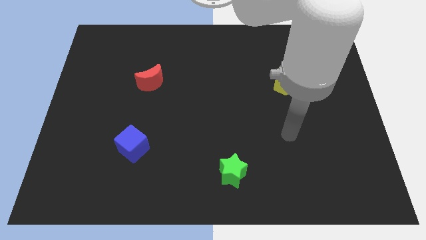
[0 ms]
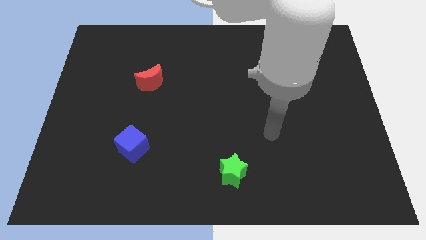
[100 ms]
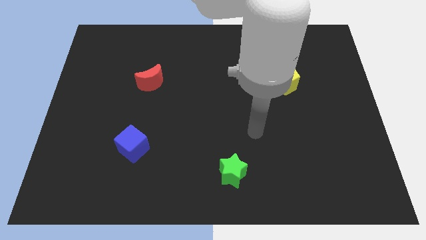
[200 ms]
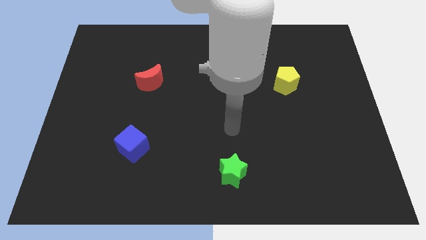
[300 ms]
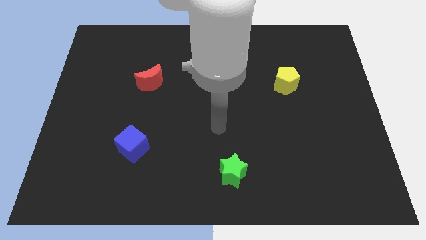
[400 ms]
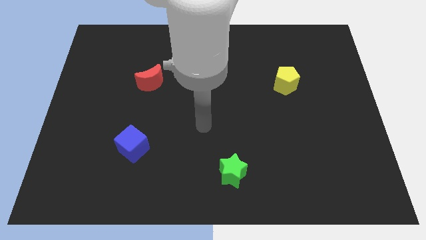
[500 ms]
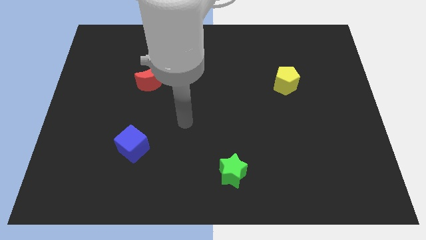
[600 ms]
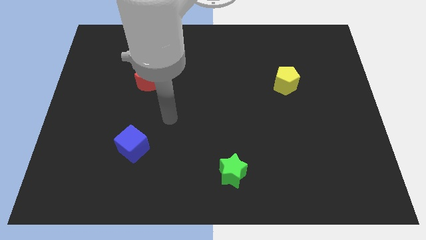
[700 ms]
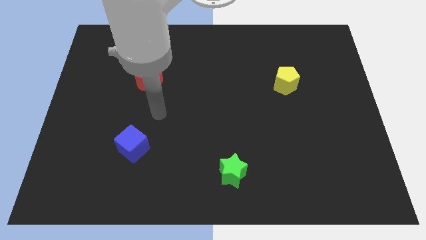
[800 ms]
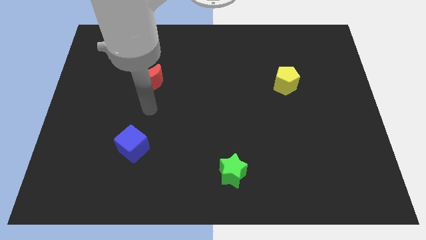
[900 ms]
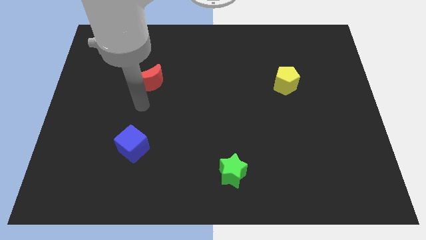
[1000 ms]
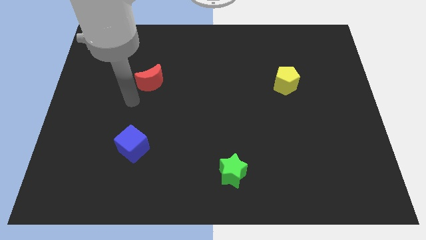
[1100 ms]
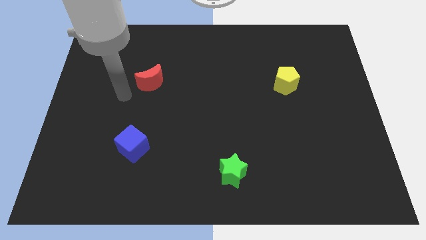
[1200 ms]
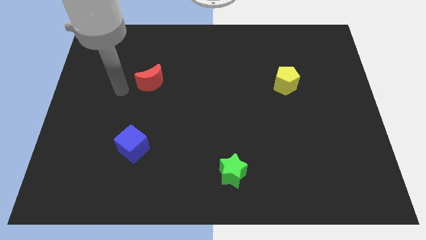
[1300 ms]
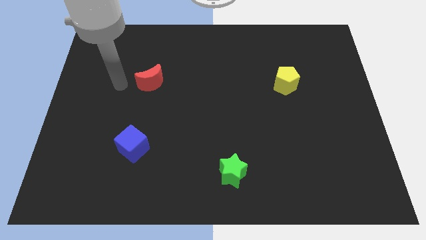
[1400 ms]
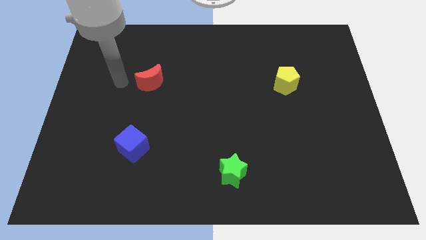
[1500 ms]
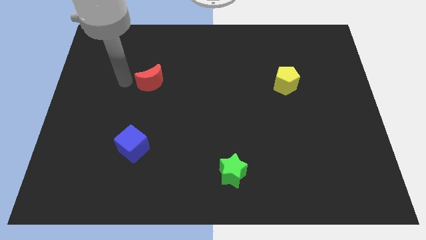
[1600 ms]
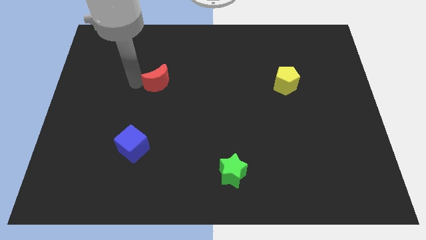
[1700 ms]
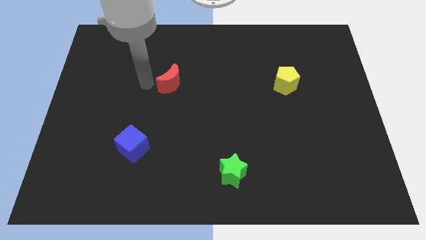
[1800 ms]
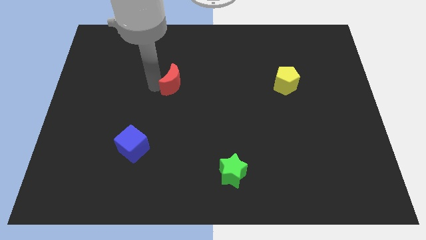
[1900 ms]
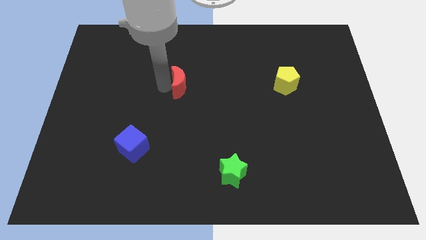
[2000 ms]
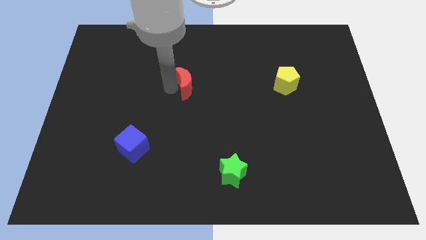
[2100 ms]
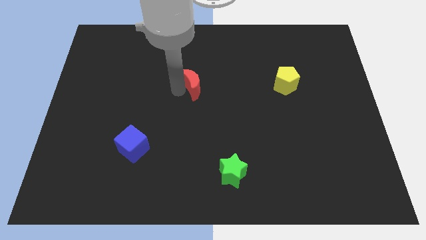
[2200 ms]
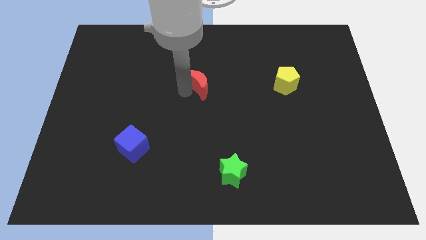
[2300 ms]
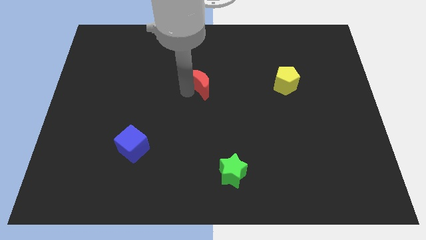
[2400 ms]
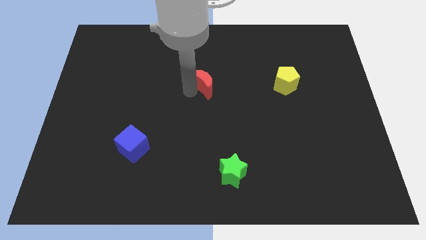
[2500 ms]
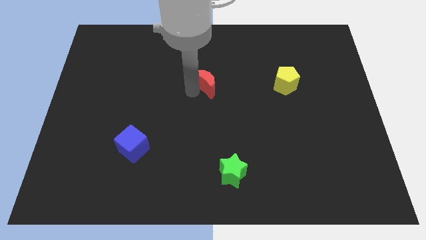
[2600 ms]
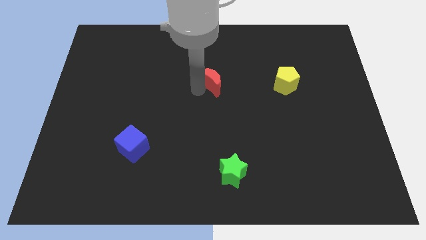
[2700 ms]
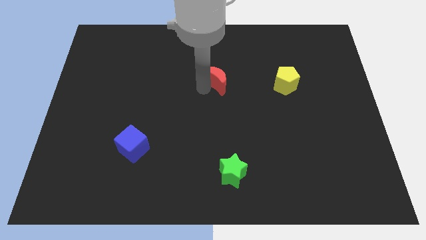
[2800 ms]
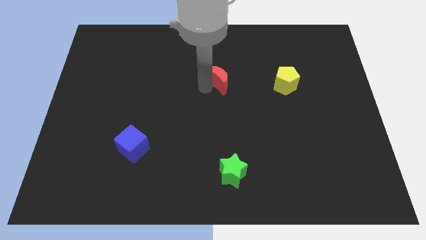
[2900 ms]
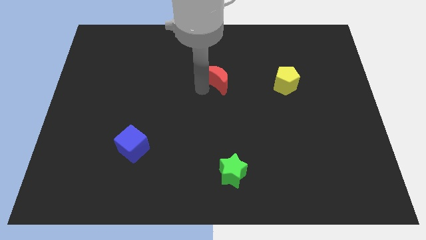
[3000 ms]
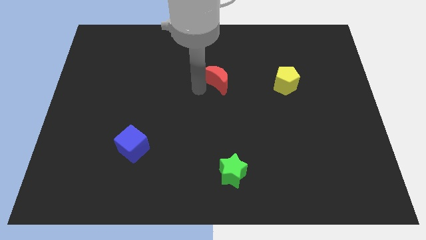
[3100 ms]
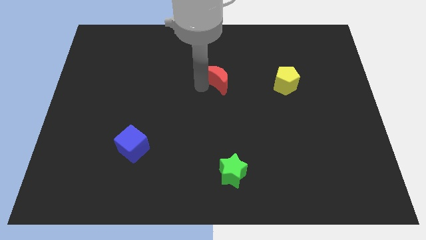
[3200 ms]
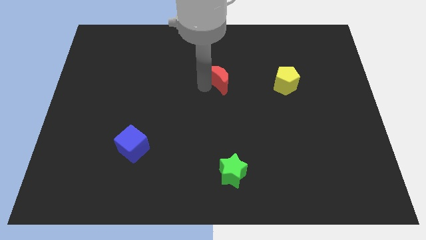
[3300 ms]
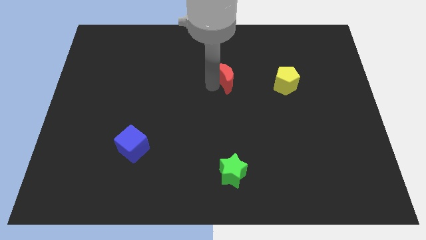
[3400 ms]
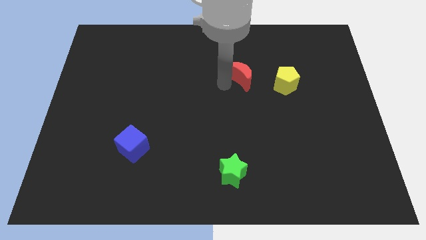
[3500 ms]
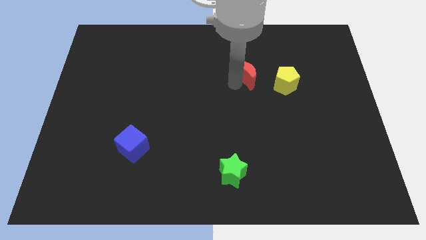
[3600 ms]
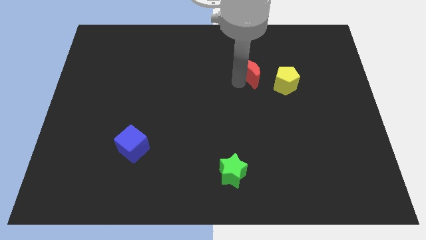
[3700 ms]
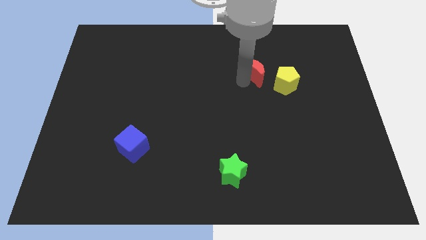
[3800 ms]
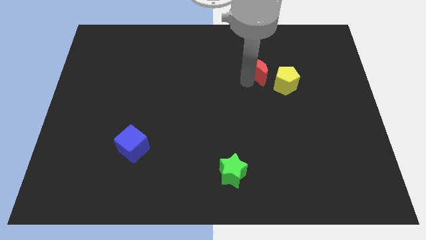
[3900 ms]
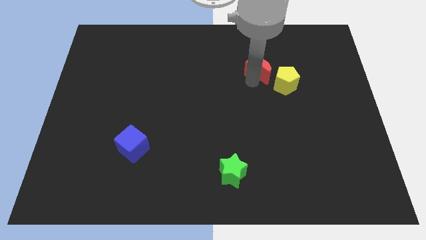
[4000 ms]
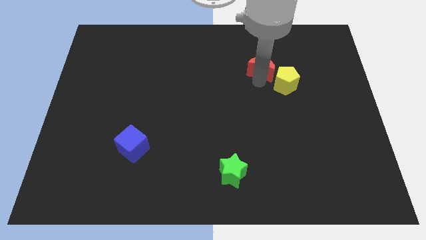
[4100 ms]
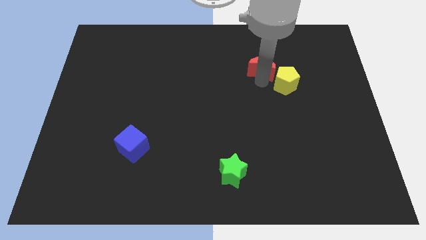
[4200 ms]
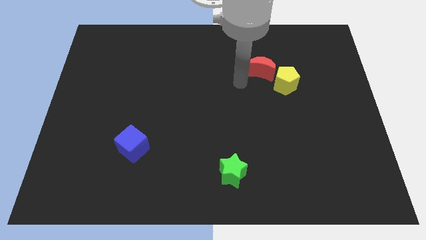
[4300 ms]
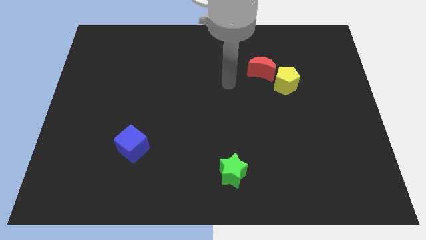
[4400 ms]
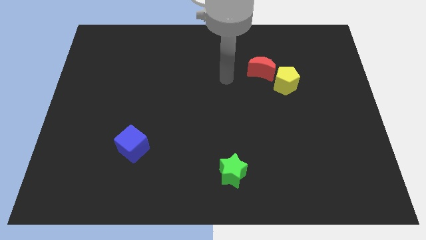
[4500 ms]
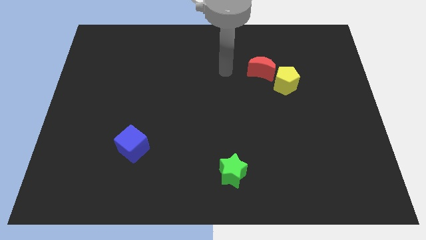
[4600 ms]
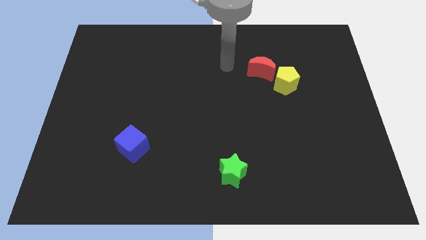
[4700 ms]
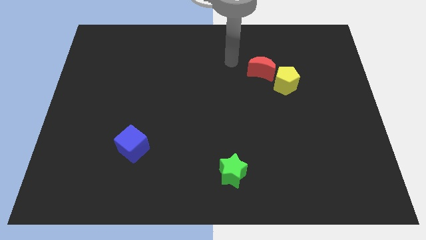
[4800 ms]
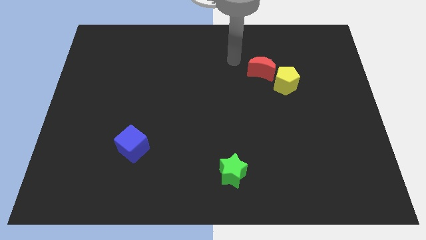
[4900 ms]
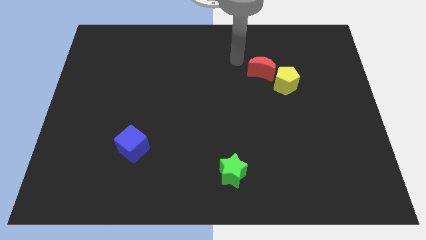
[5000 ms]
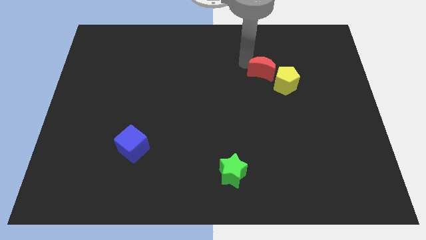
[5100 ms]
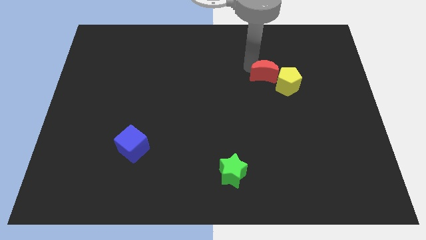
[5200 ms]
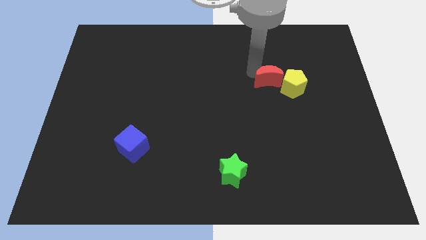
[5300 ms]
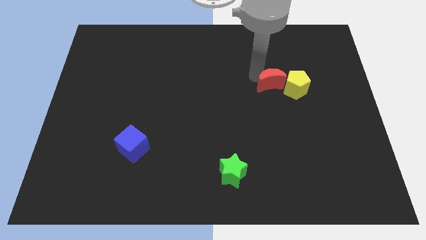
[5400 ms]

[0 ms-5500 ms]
slide the red block towards the pentagon

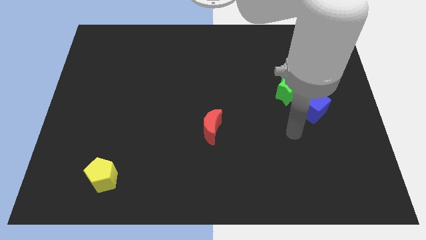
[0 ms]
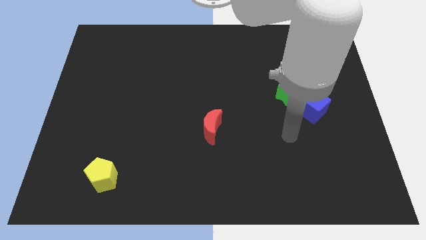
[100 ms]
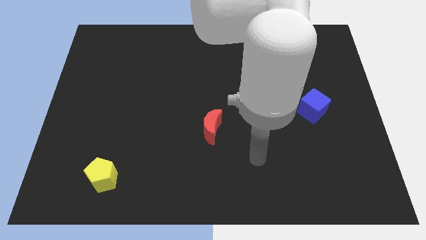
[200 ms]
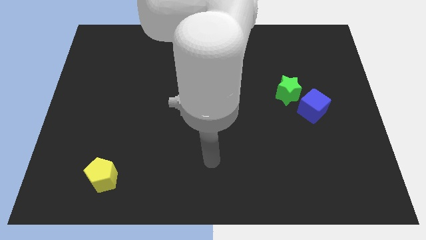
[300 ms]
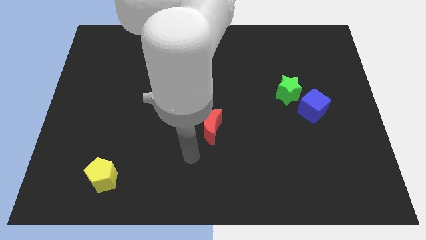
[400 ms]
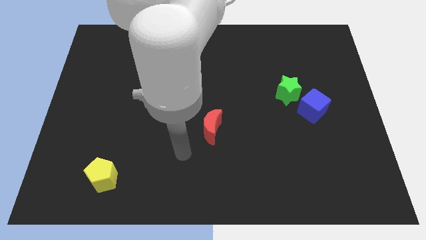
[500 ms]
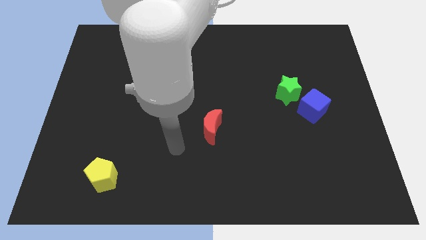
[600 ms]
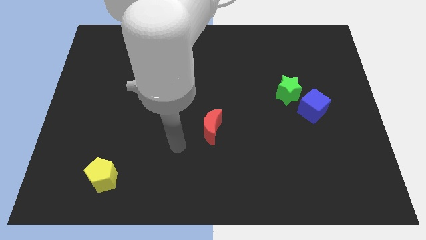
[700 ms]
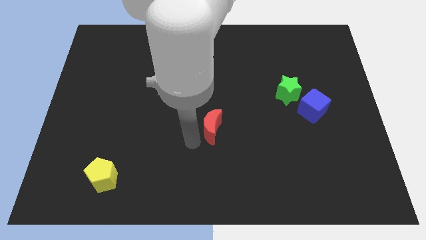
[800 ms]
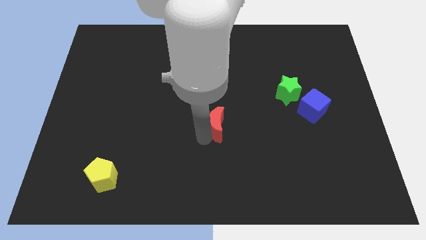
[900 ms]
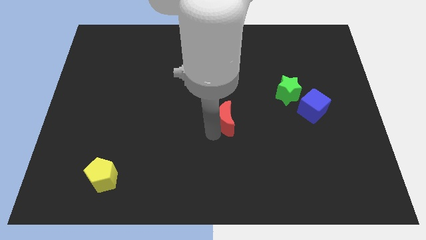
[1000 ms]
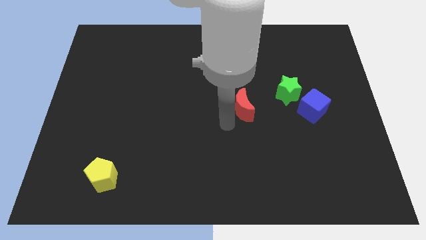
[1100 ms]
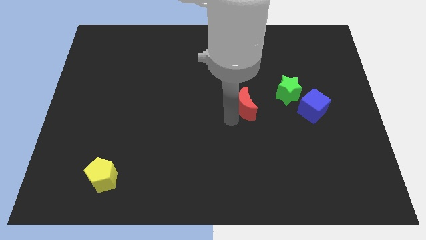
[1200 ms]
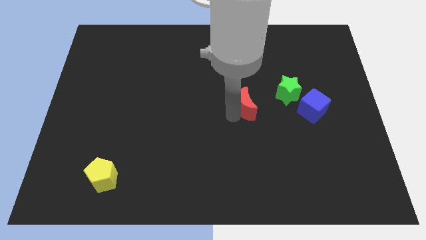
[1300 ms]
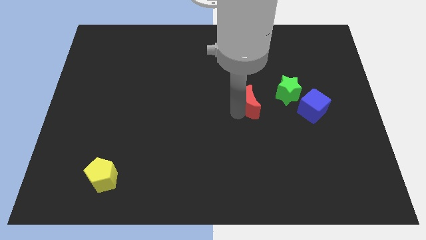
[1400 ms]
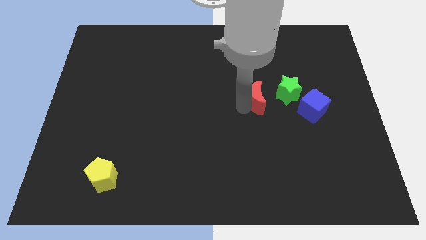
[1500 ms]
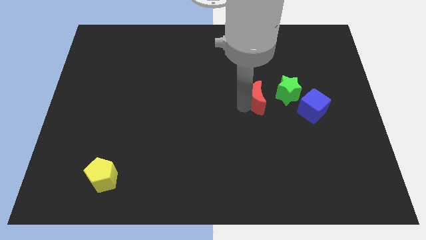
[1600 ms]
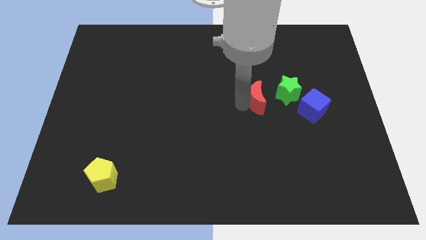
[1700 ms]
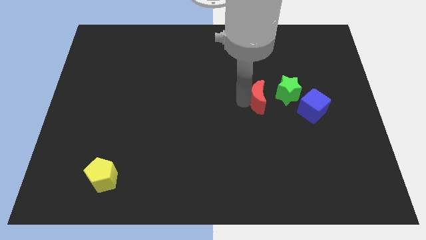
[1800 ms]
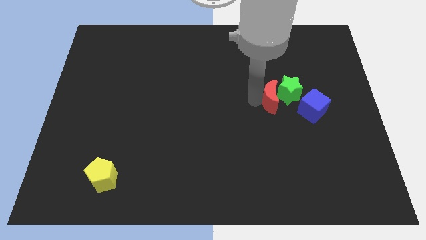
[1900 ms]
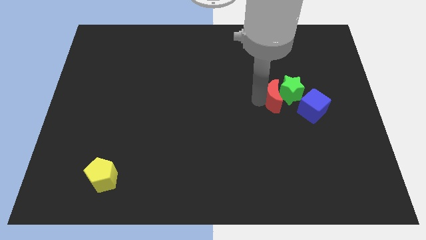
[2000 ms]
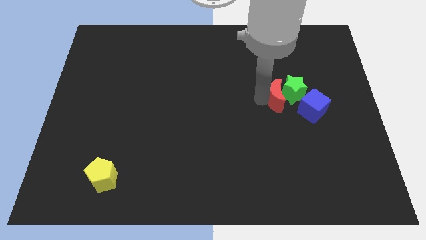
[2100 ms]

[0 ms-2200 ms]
move the moon next to the green block

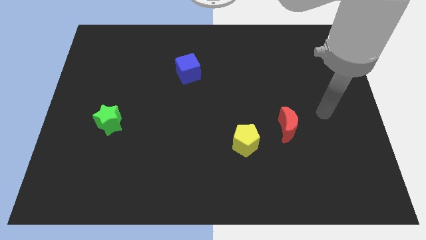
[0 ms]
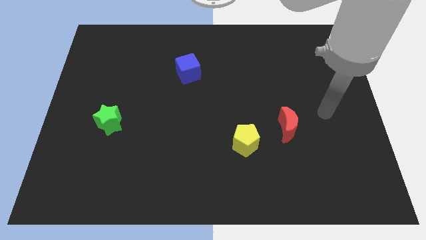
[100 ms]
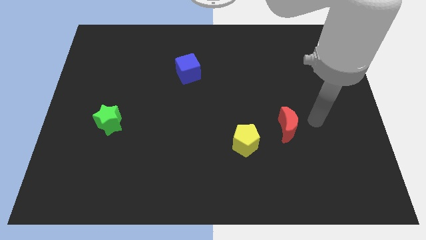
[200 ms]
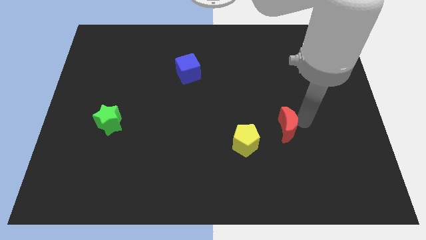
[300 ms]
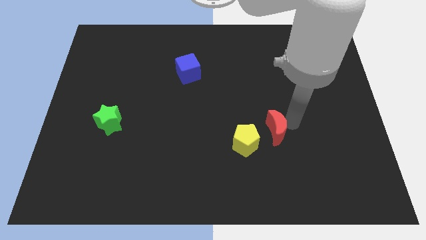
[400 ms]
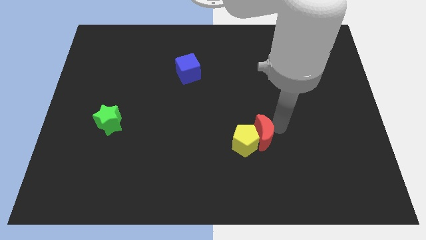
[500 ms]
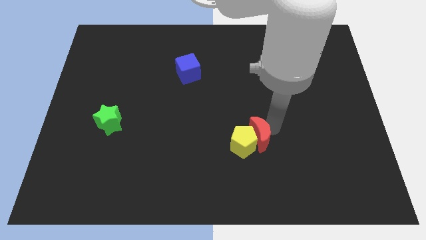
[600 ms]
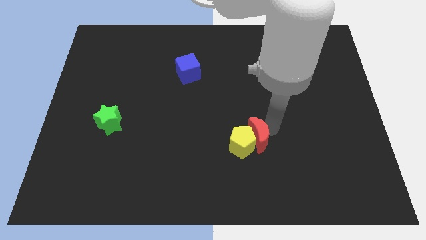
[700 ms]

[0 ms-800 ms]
push the red moon close to the pentagon
